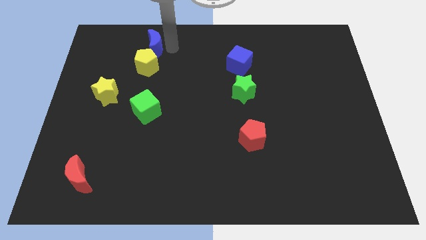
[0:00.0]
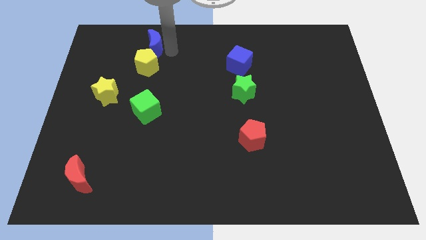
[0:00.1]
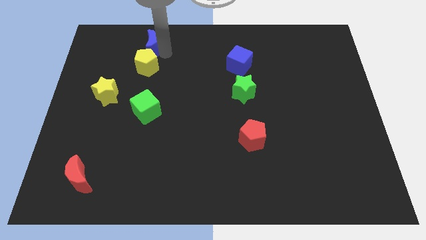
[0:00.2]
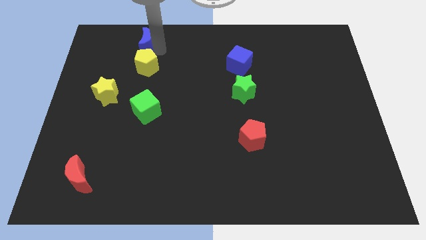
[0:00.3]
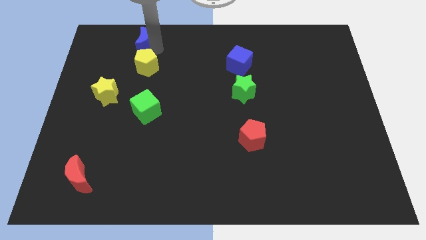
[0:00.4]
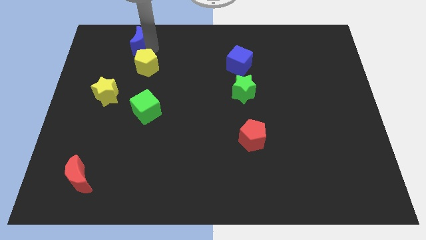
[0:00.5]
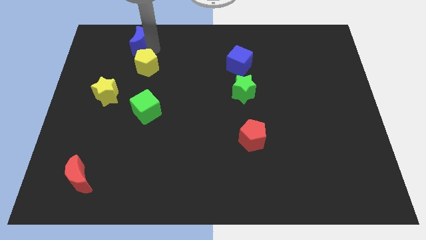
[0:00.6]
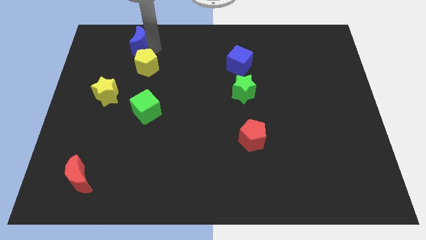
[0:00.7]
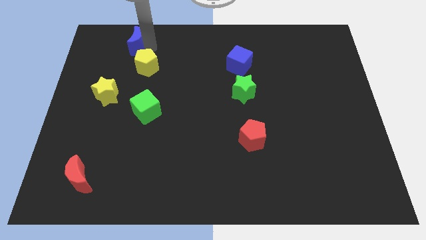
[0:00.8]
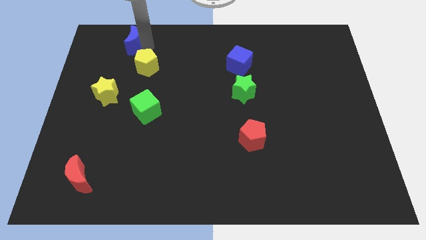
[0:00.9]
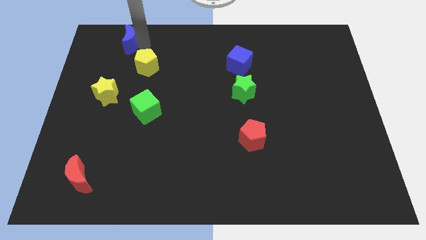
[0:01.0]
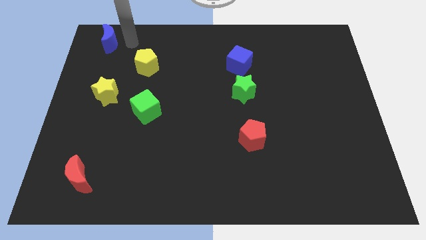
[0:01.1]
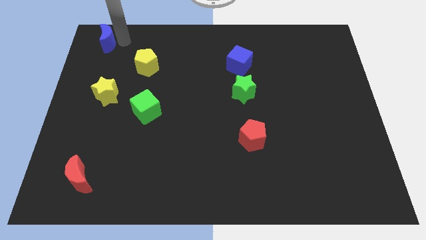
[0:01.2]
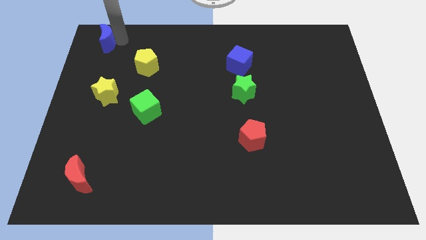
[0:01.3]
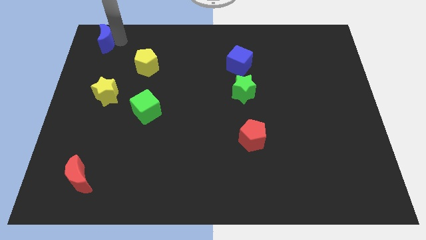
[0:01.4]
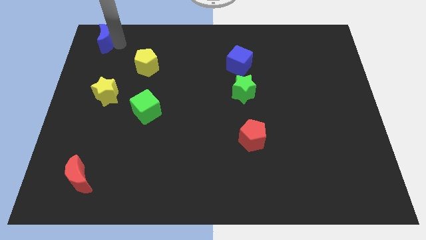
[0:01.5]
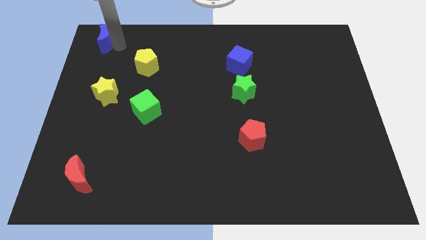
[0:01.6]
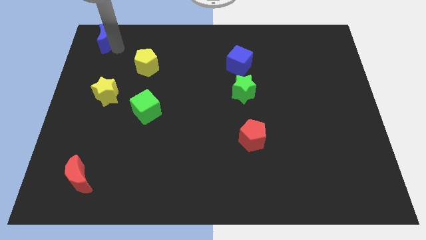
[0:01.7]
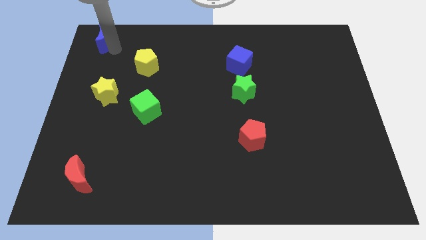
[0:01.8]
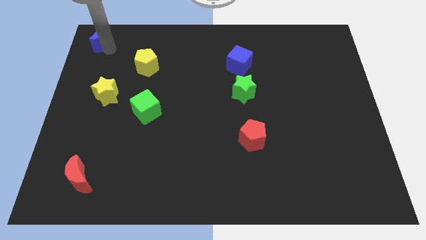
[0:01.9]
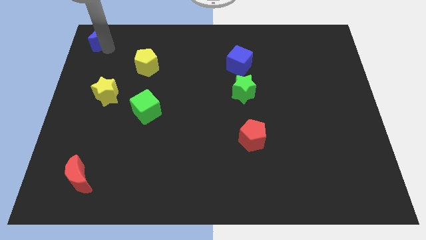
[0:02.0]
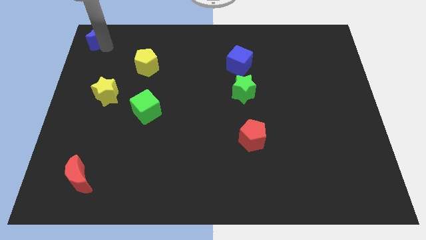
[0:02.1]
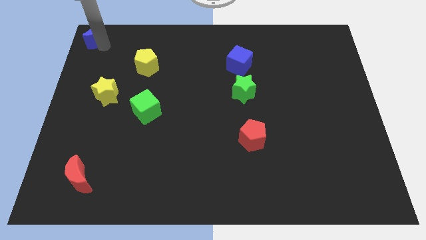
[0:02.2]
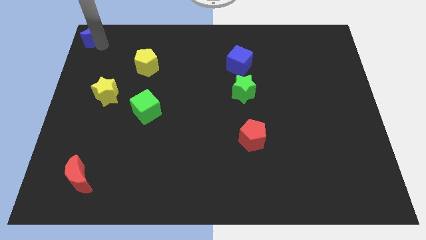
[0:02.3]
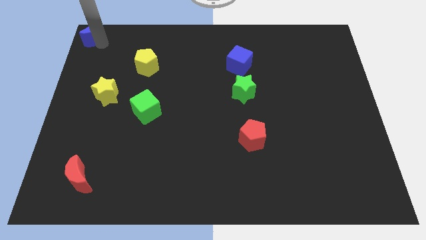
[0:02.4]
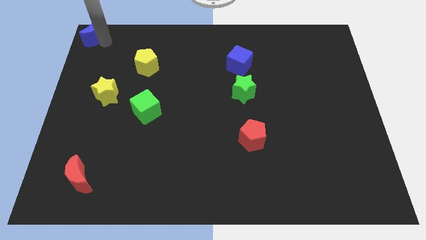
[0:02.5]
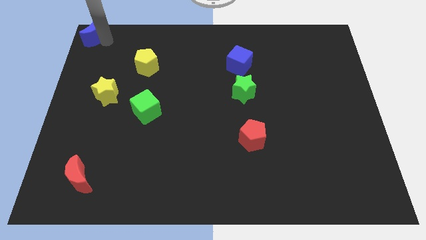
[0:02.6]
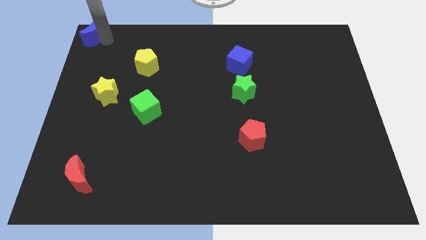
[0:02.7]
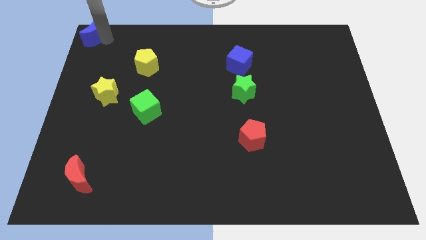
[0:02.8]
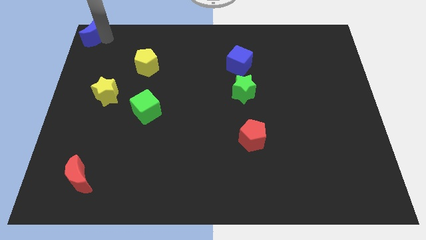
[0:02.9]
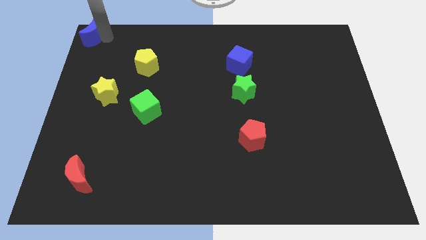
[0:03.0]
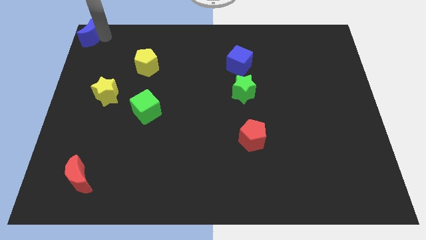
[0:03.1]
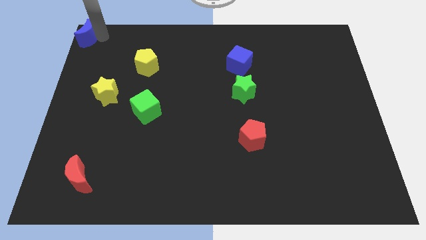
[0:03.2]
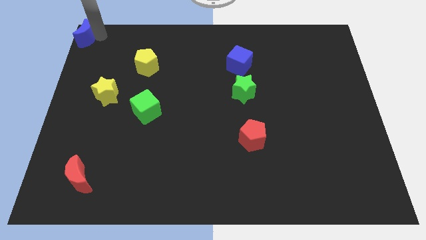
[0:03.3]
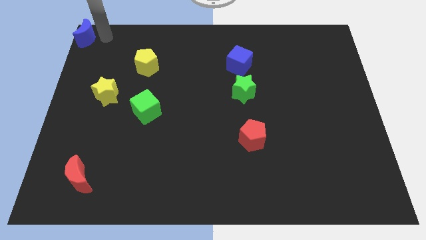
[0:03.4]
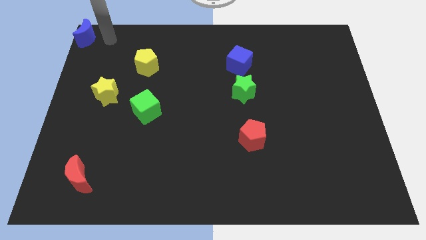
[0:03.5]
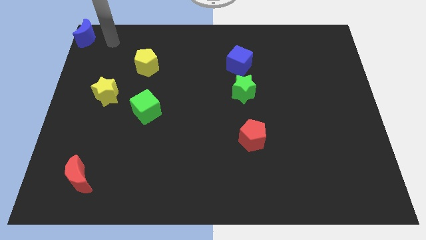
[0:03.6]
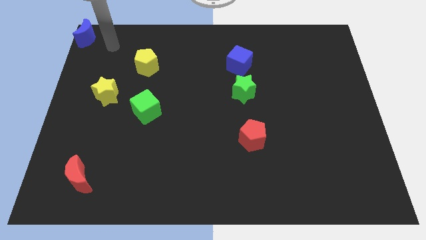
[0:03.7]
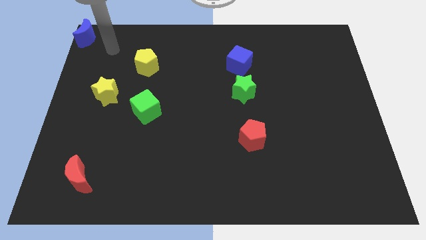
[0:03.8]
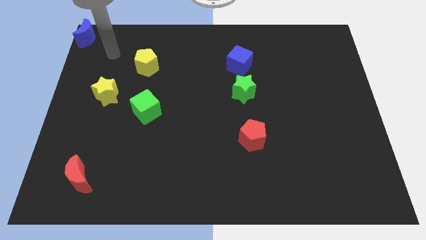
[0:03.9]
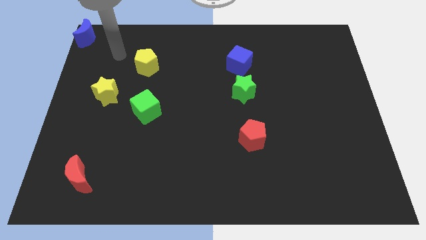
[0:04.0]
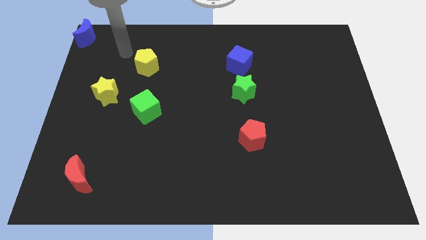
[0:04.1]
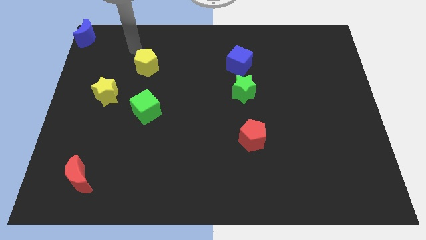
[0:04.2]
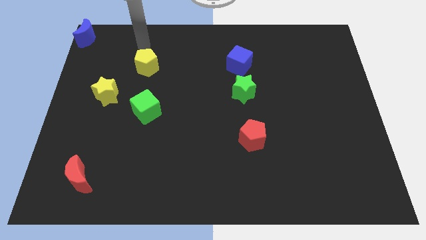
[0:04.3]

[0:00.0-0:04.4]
move the blue crescent to the top left corner of the board

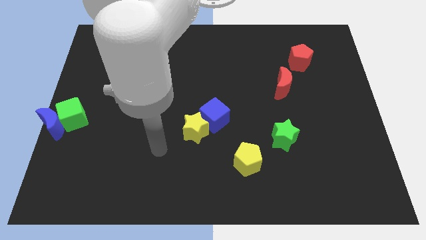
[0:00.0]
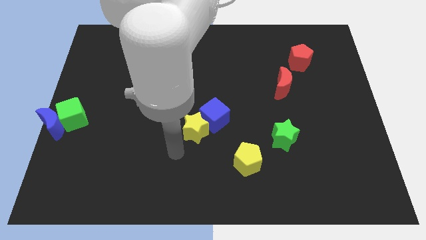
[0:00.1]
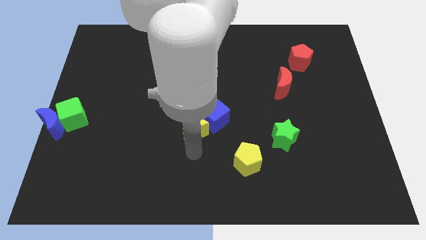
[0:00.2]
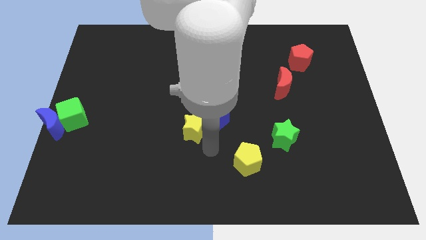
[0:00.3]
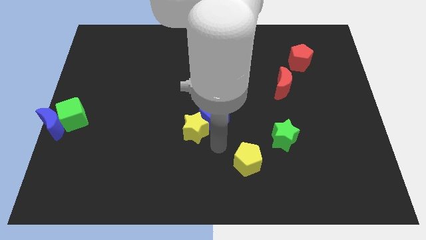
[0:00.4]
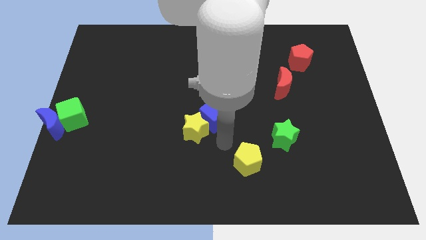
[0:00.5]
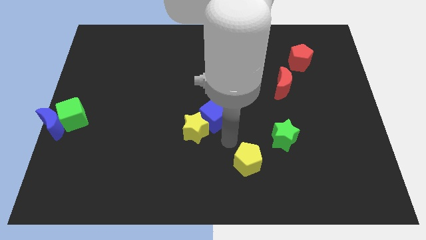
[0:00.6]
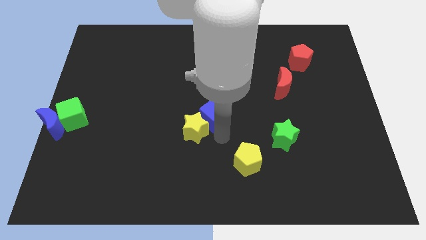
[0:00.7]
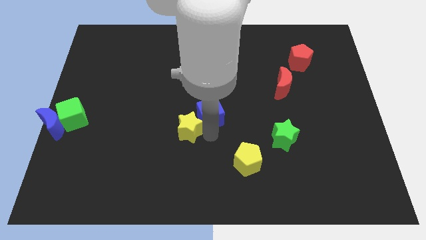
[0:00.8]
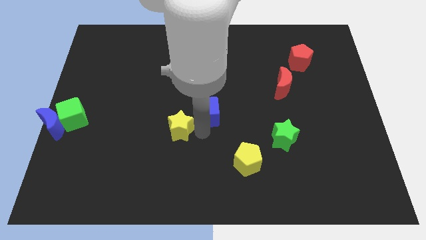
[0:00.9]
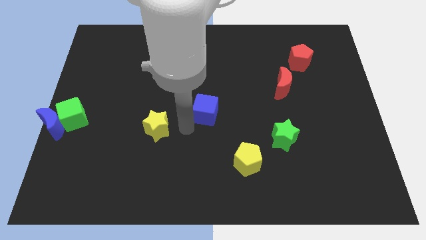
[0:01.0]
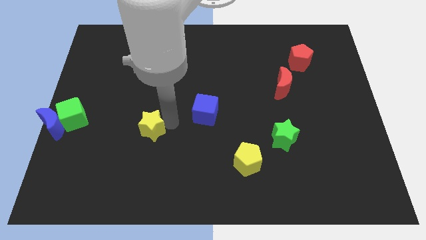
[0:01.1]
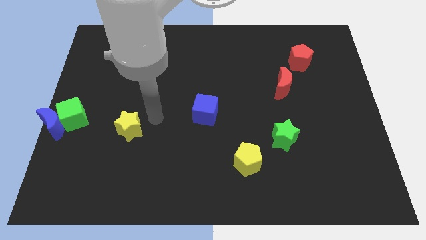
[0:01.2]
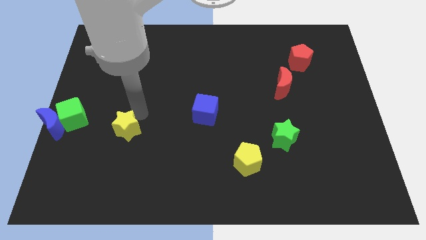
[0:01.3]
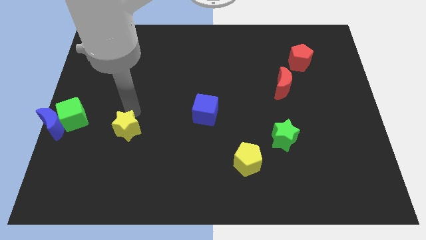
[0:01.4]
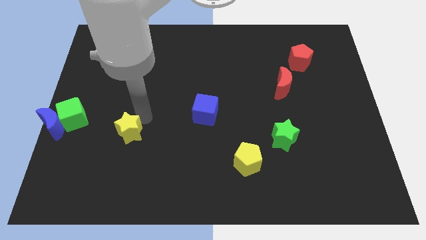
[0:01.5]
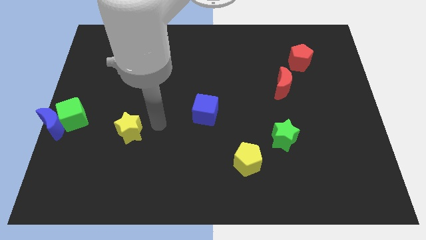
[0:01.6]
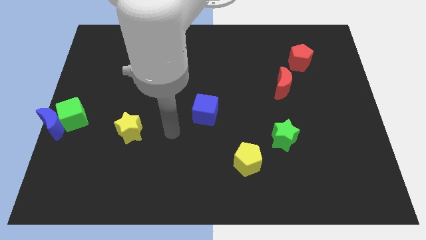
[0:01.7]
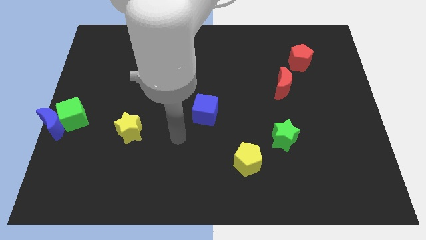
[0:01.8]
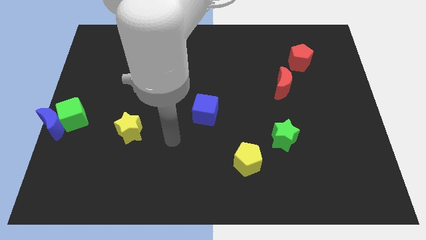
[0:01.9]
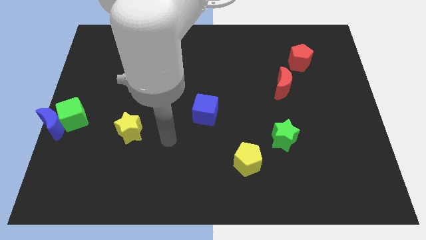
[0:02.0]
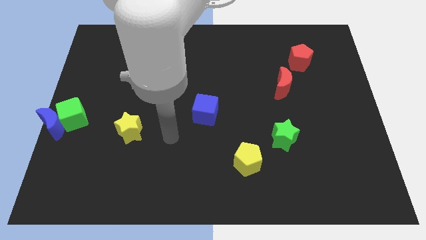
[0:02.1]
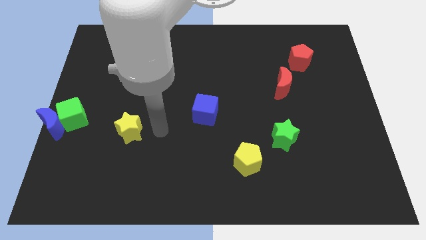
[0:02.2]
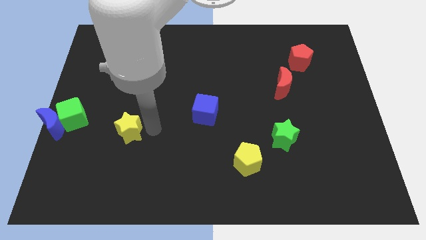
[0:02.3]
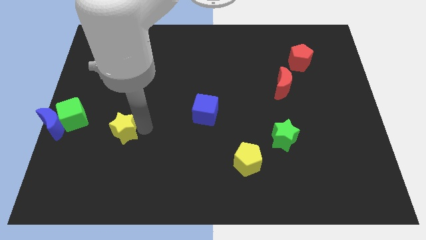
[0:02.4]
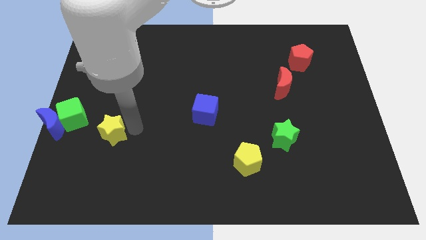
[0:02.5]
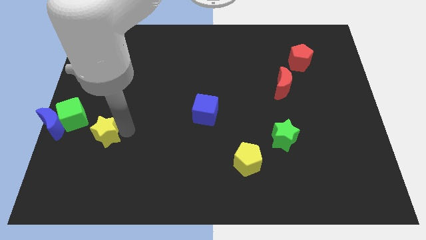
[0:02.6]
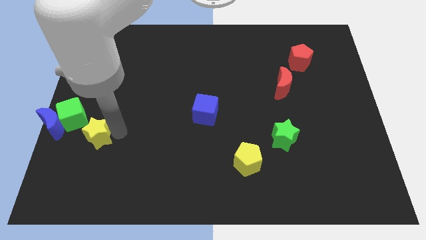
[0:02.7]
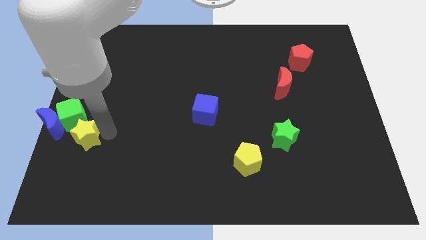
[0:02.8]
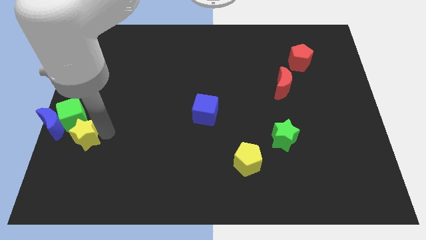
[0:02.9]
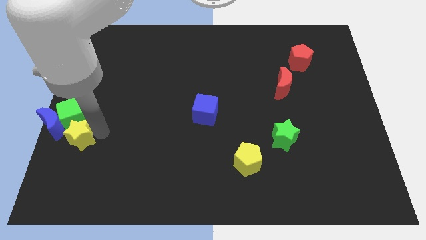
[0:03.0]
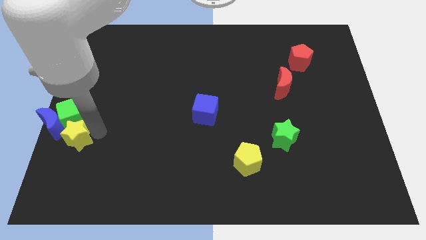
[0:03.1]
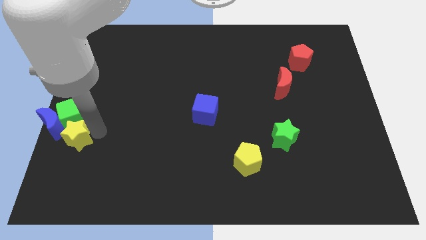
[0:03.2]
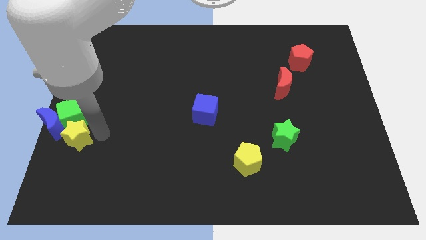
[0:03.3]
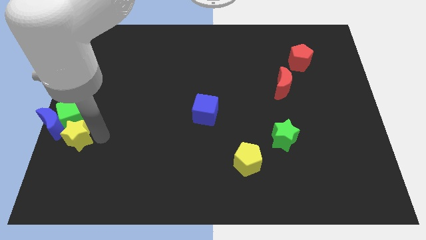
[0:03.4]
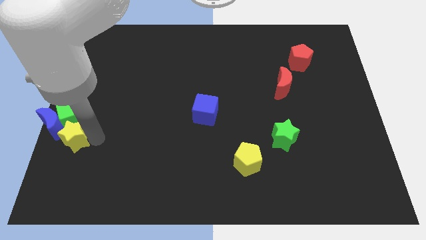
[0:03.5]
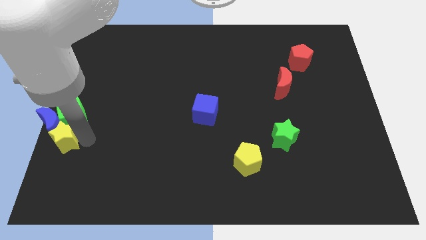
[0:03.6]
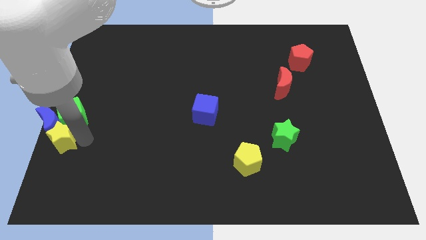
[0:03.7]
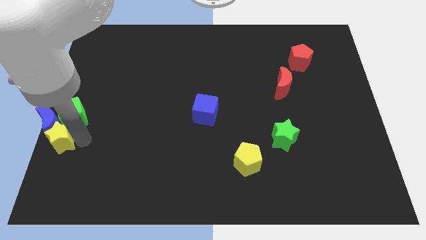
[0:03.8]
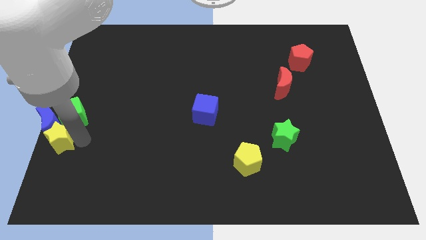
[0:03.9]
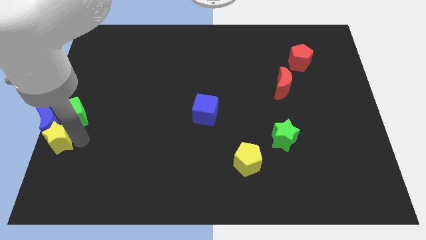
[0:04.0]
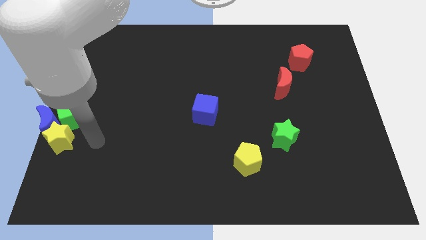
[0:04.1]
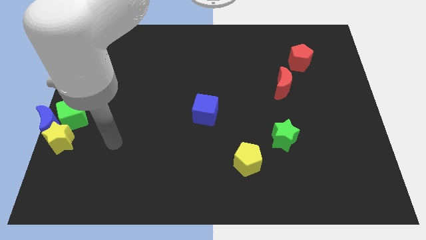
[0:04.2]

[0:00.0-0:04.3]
place the yellow star below the blue moon

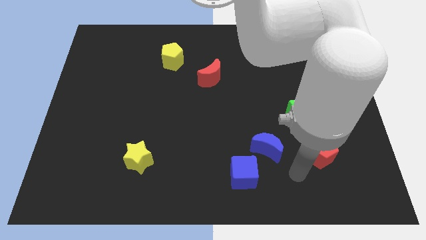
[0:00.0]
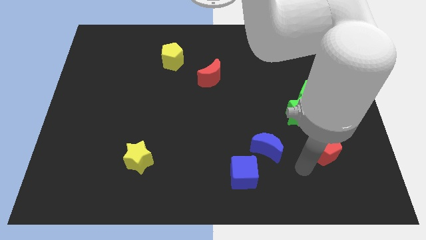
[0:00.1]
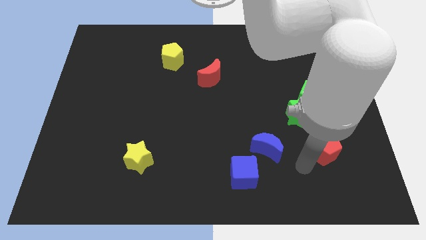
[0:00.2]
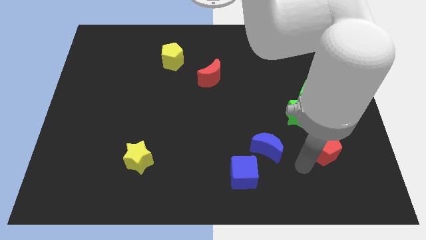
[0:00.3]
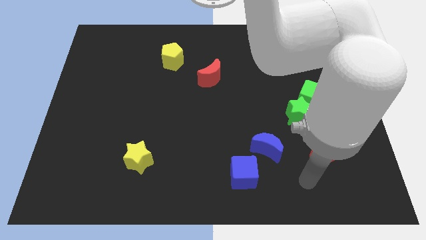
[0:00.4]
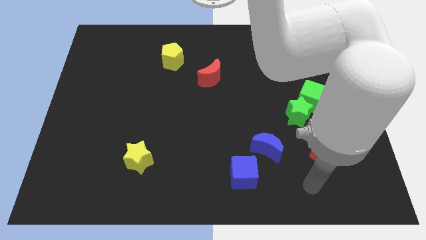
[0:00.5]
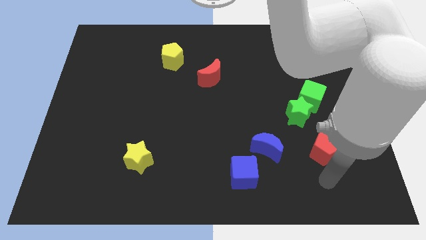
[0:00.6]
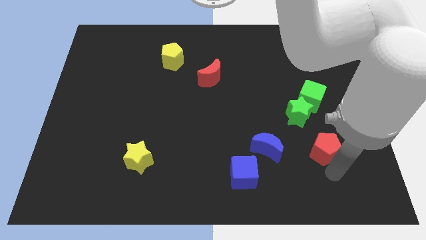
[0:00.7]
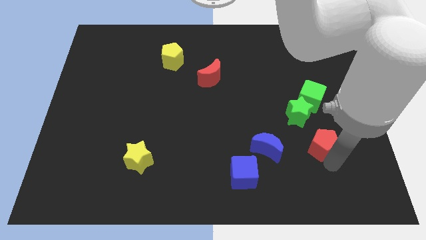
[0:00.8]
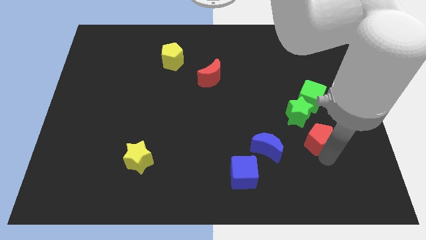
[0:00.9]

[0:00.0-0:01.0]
push red pentagon towards green blocks
